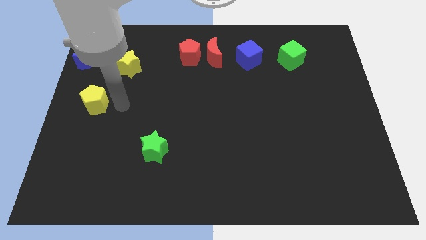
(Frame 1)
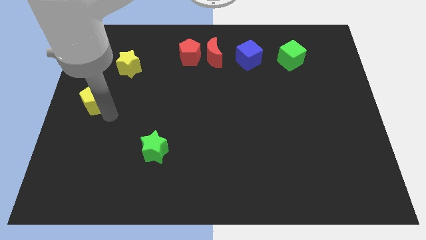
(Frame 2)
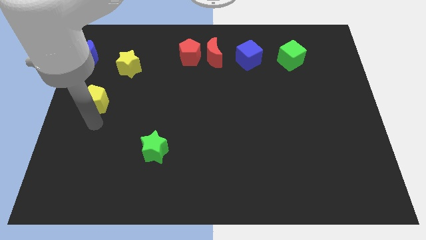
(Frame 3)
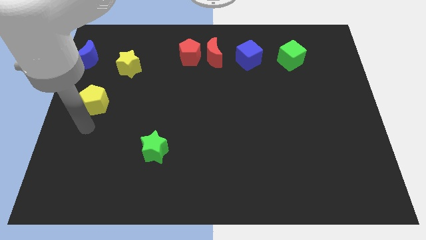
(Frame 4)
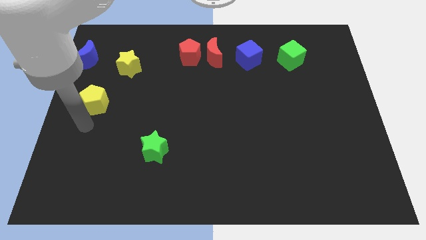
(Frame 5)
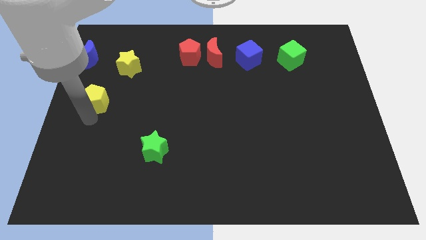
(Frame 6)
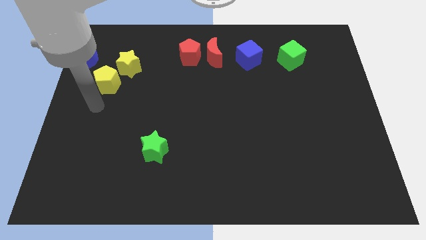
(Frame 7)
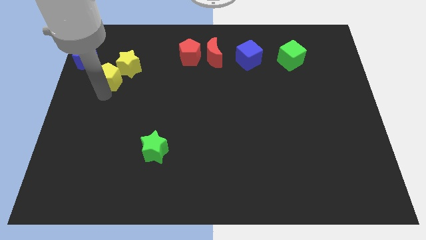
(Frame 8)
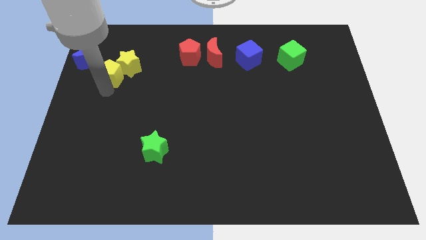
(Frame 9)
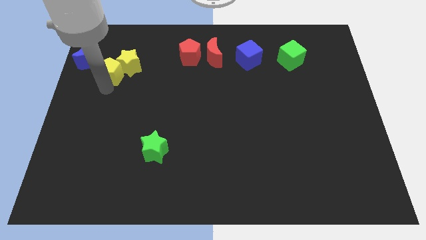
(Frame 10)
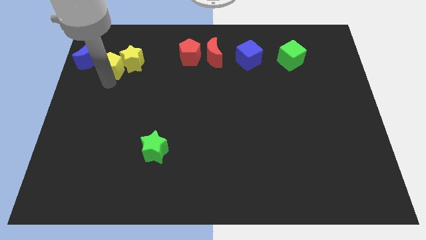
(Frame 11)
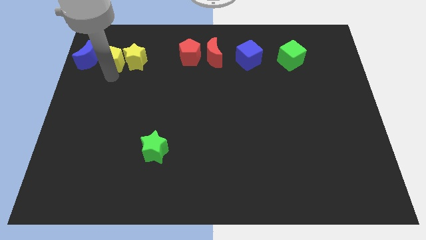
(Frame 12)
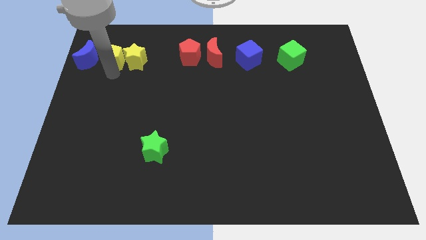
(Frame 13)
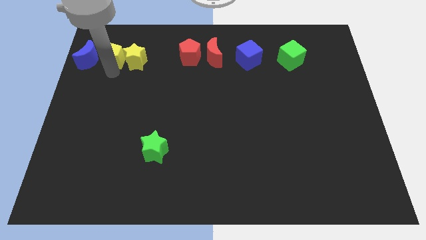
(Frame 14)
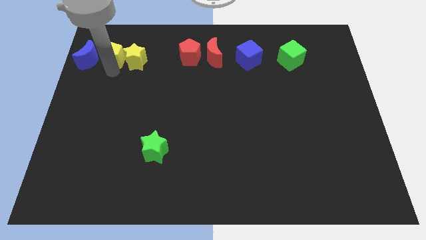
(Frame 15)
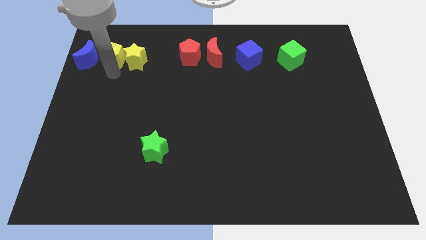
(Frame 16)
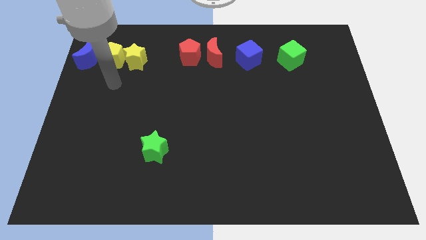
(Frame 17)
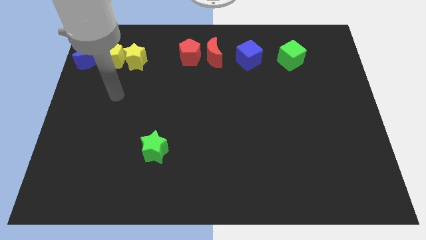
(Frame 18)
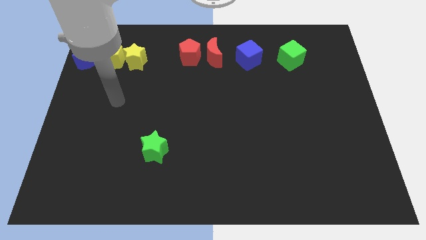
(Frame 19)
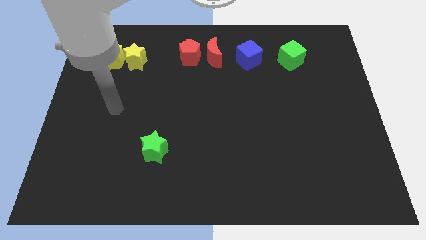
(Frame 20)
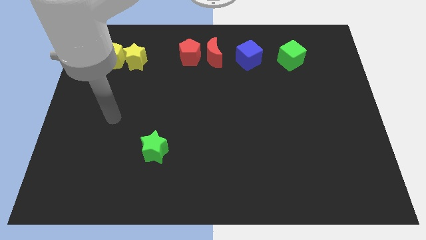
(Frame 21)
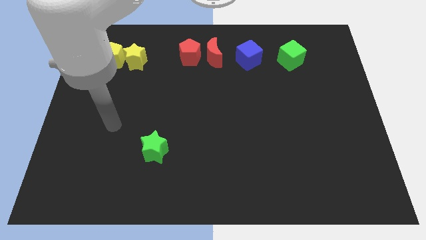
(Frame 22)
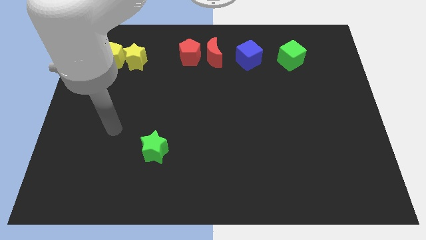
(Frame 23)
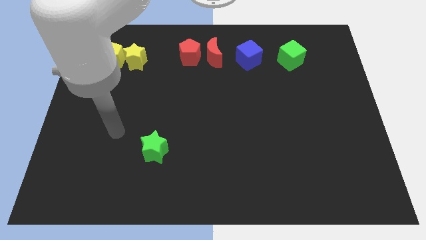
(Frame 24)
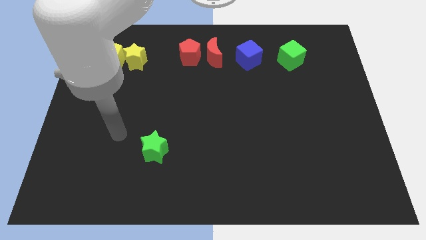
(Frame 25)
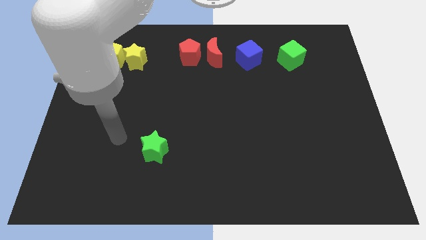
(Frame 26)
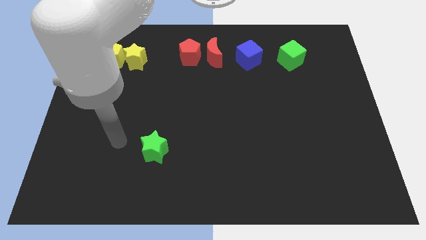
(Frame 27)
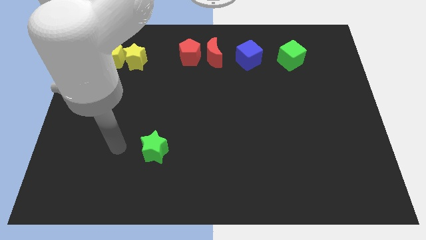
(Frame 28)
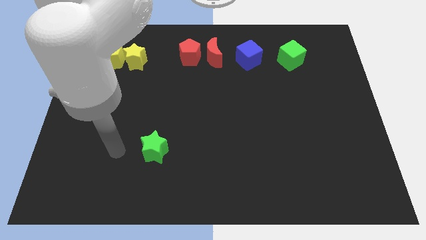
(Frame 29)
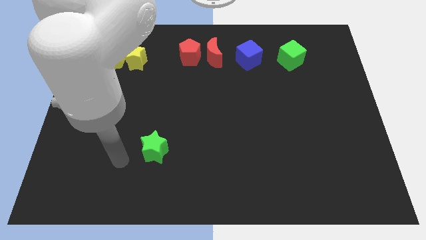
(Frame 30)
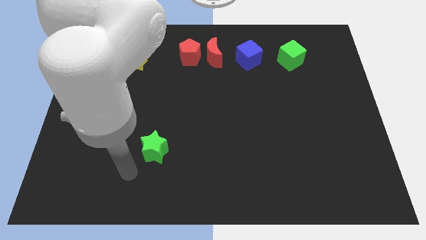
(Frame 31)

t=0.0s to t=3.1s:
move the yellow pentagon close to yellow star

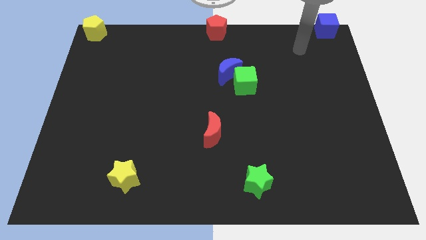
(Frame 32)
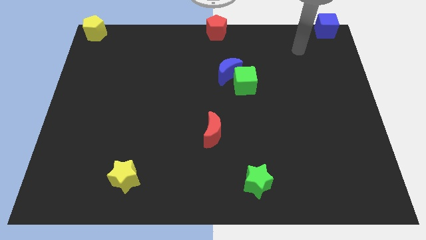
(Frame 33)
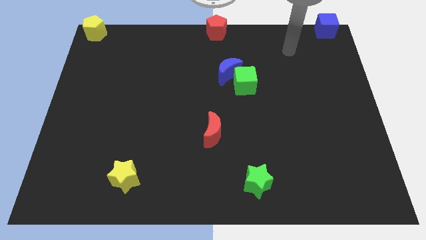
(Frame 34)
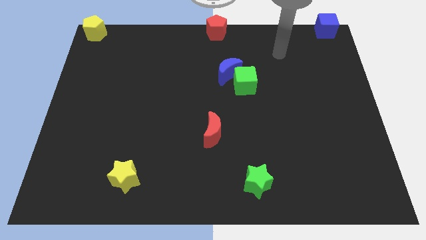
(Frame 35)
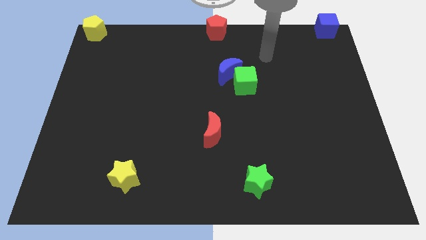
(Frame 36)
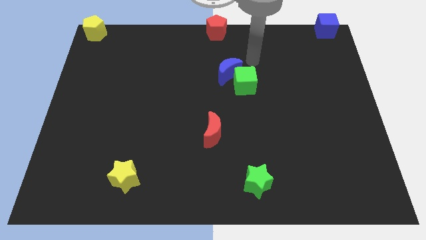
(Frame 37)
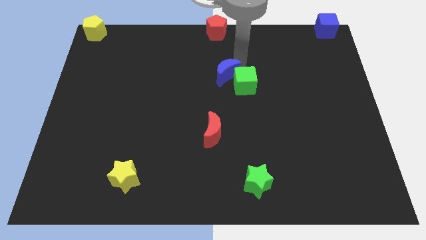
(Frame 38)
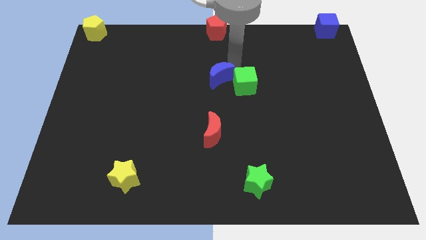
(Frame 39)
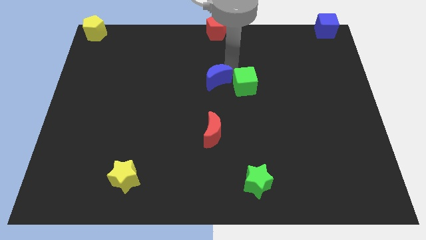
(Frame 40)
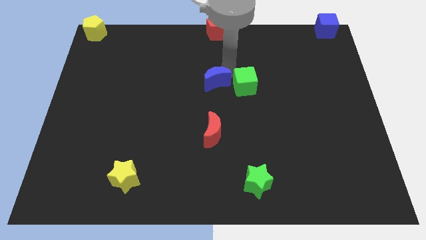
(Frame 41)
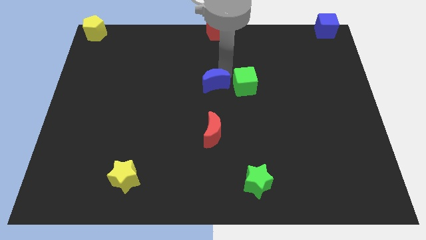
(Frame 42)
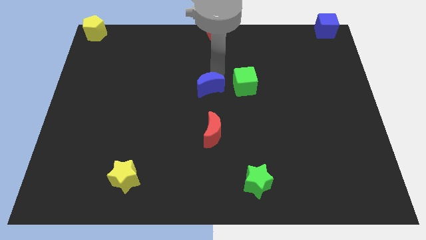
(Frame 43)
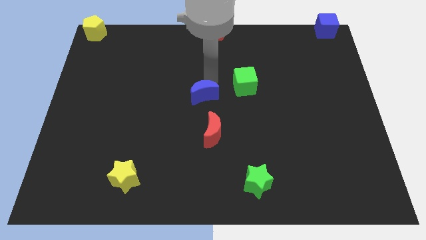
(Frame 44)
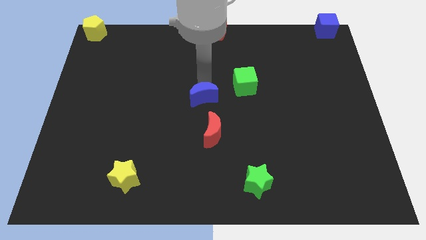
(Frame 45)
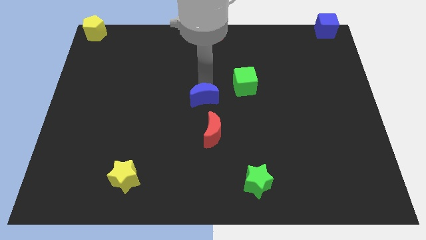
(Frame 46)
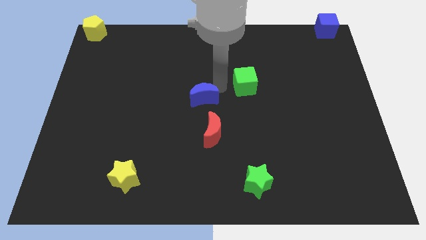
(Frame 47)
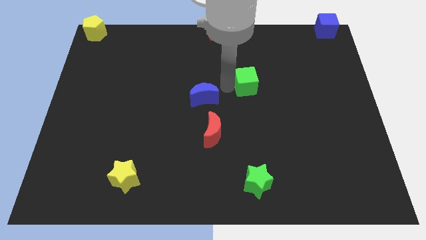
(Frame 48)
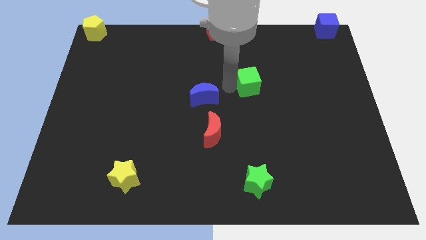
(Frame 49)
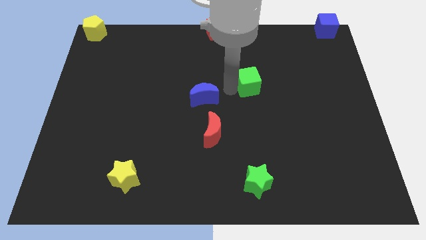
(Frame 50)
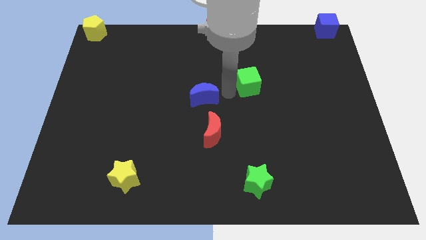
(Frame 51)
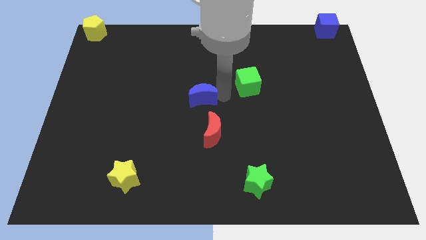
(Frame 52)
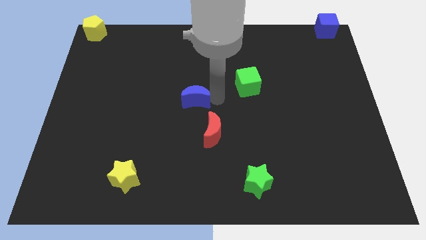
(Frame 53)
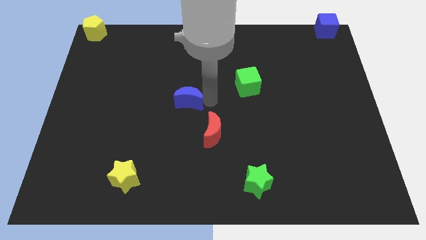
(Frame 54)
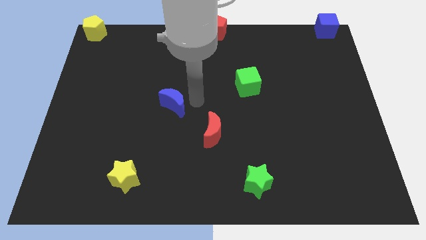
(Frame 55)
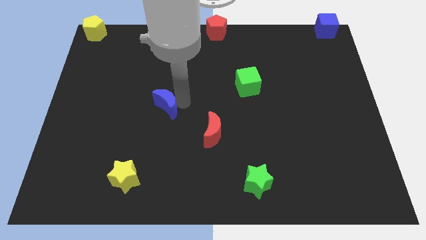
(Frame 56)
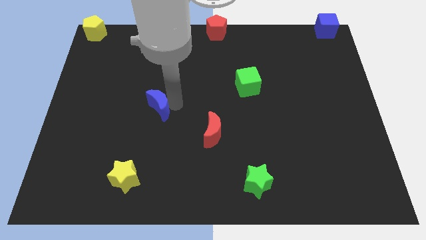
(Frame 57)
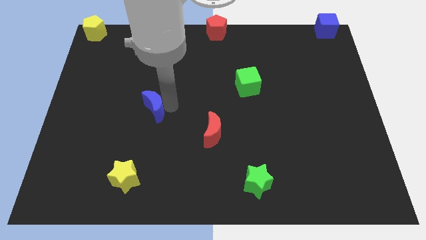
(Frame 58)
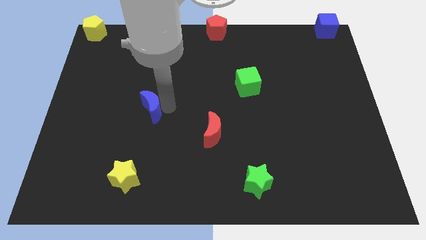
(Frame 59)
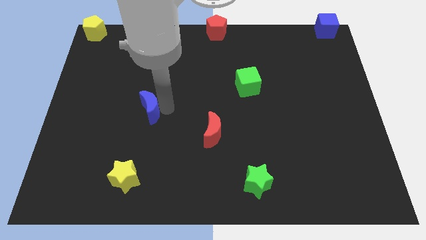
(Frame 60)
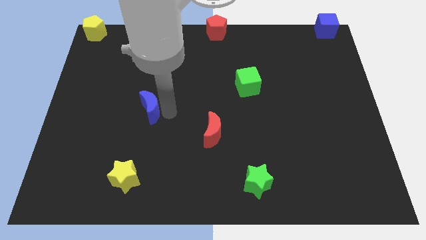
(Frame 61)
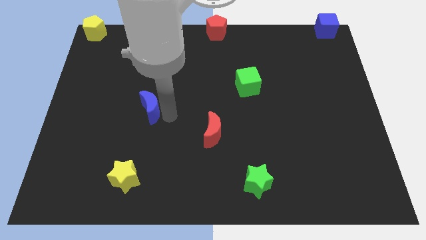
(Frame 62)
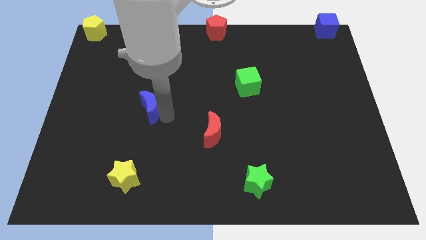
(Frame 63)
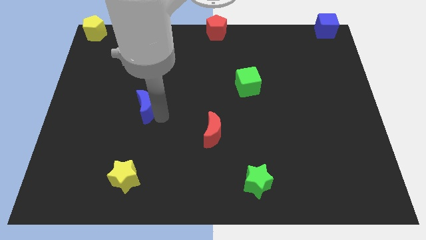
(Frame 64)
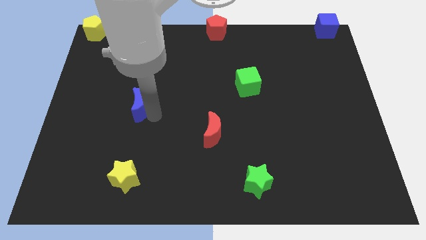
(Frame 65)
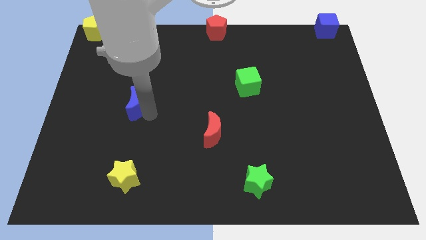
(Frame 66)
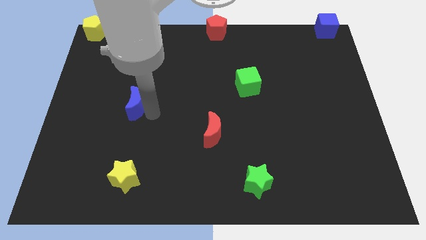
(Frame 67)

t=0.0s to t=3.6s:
place the blue crescent vertically above the yellow star

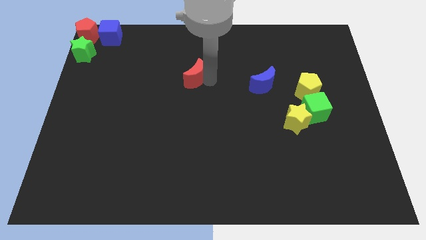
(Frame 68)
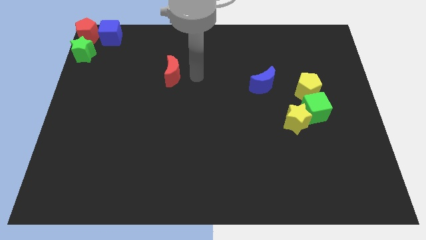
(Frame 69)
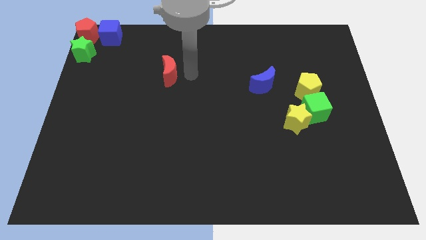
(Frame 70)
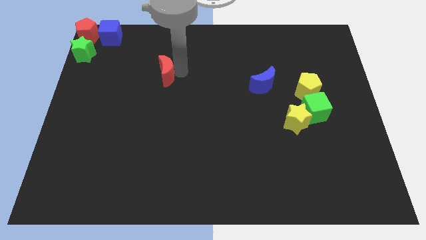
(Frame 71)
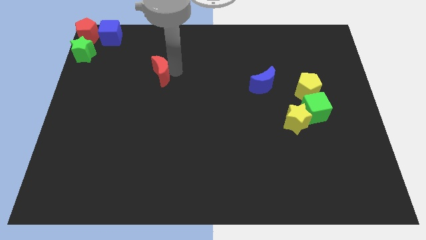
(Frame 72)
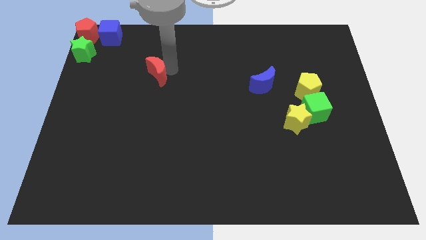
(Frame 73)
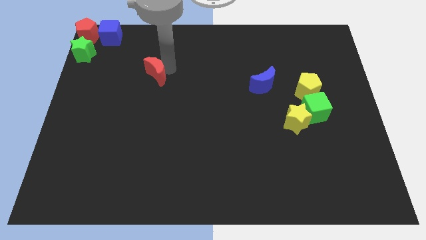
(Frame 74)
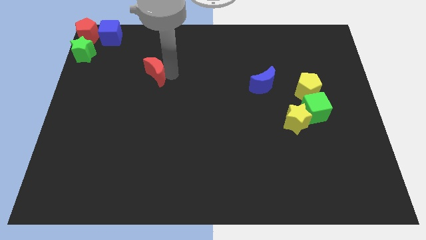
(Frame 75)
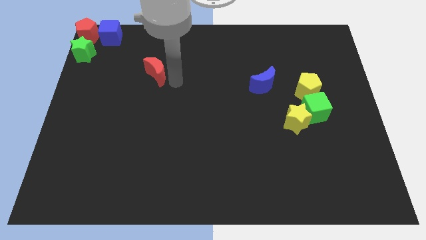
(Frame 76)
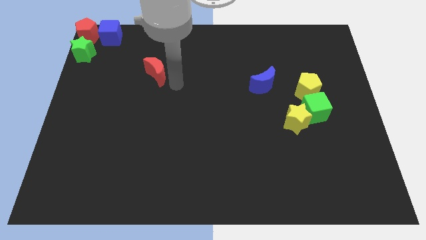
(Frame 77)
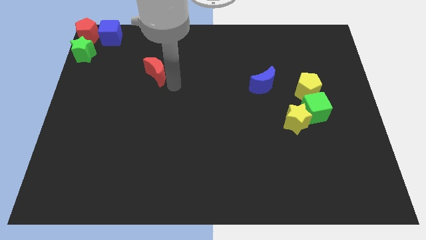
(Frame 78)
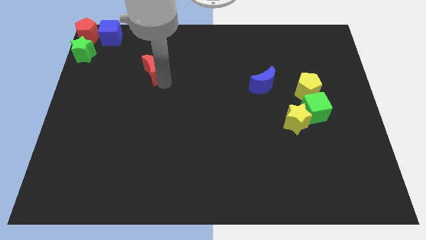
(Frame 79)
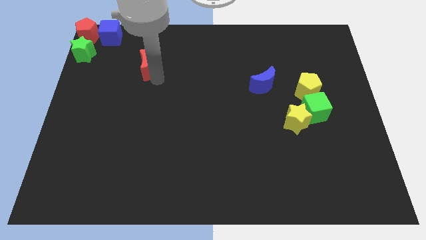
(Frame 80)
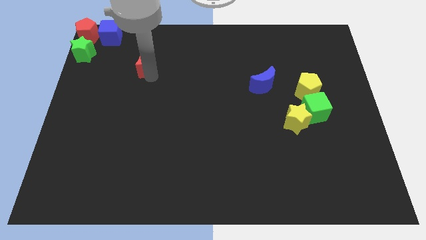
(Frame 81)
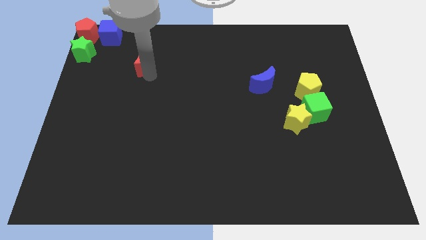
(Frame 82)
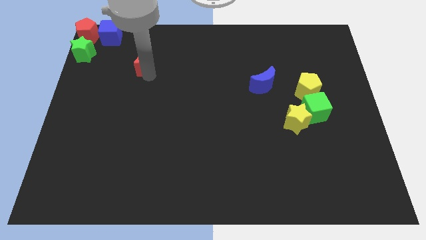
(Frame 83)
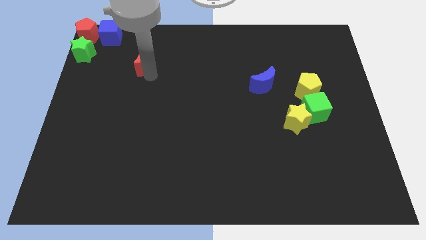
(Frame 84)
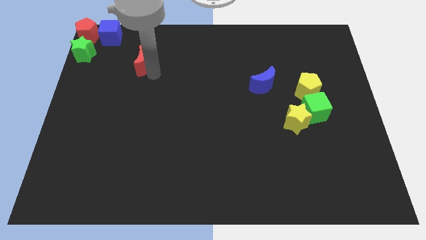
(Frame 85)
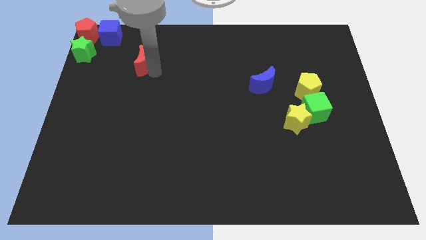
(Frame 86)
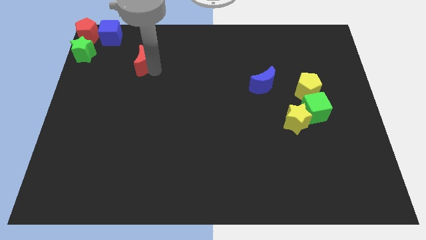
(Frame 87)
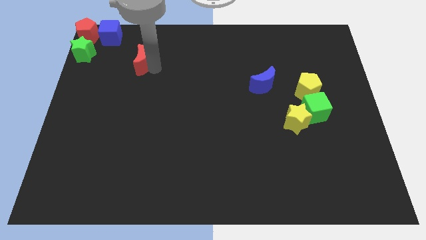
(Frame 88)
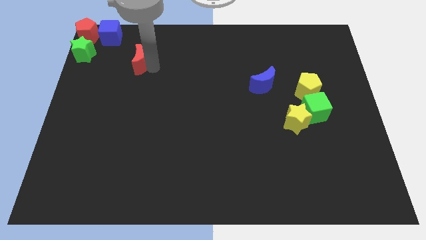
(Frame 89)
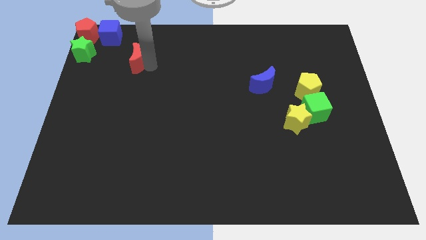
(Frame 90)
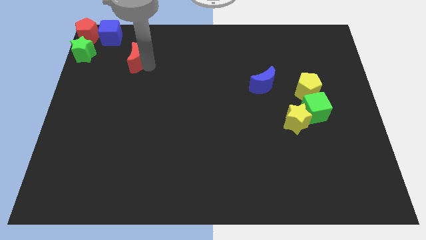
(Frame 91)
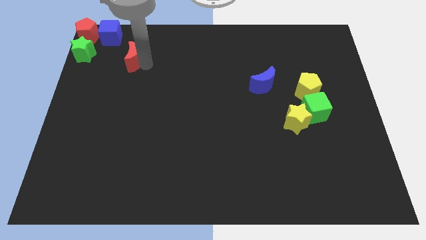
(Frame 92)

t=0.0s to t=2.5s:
move the red moon slightly to the left side of the board
